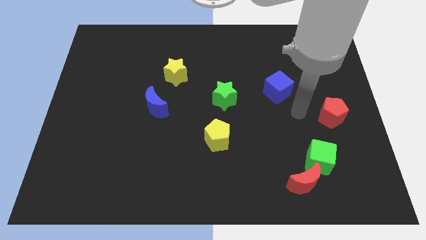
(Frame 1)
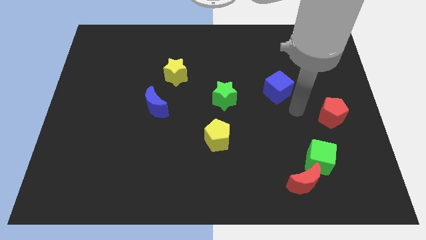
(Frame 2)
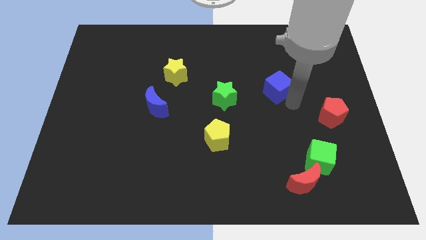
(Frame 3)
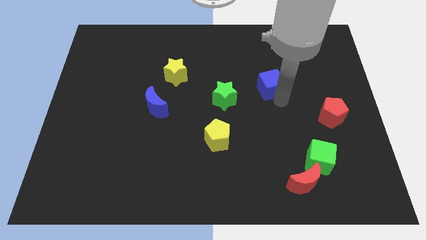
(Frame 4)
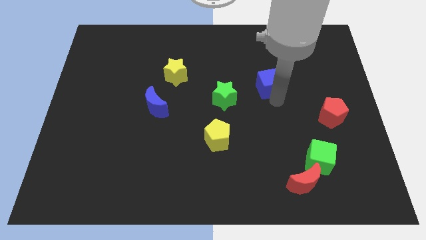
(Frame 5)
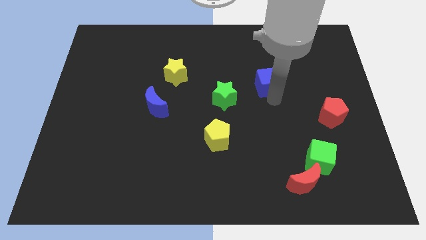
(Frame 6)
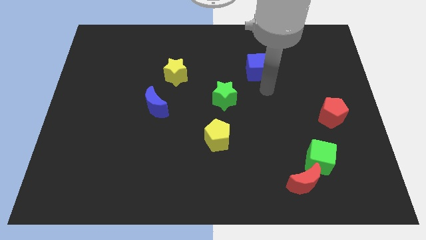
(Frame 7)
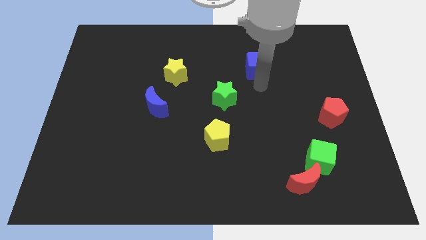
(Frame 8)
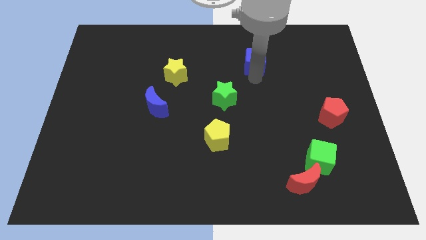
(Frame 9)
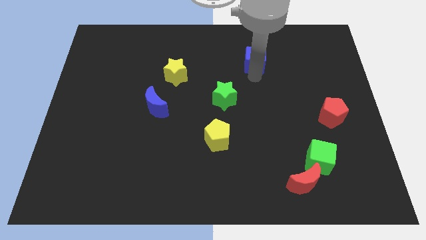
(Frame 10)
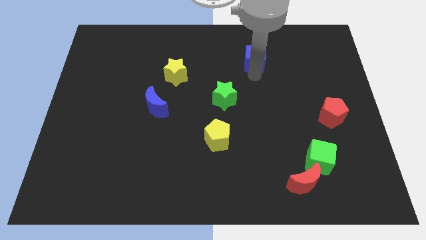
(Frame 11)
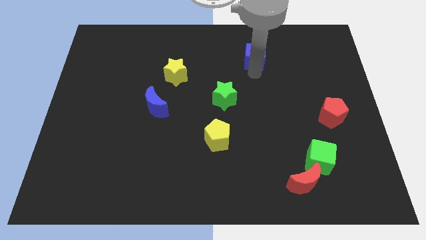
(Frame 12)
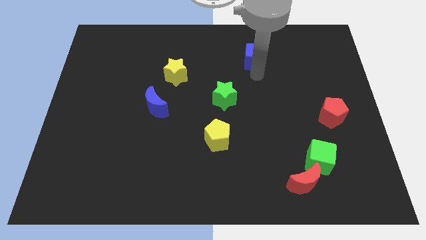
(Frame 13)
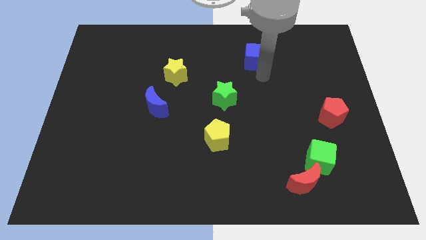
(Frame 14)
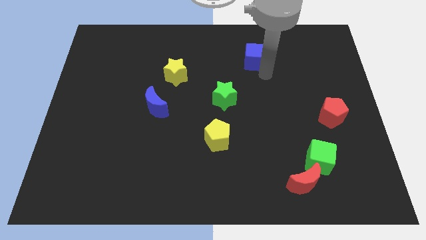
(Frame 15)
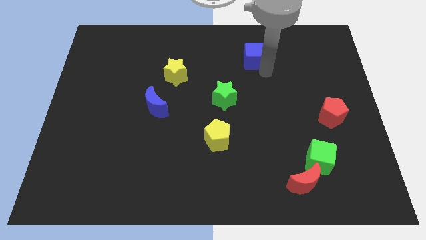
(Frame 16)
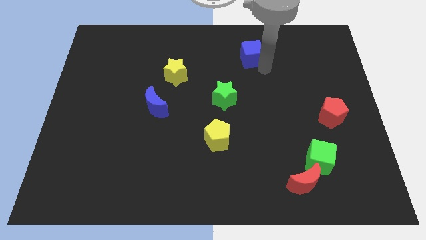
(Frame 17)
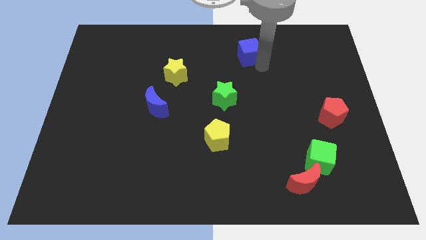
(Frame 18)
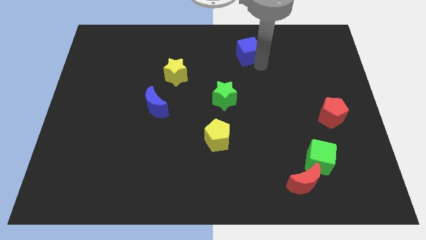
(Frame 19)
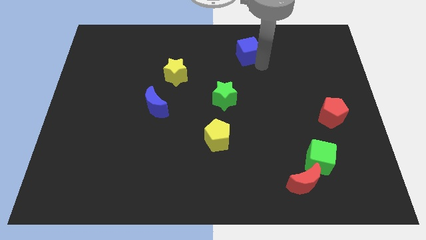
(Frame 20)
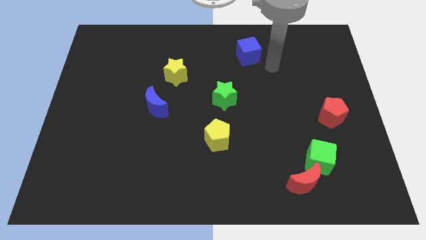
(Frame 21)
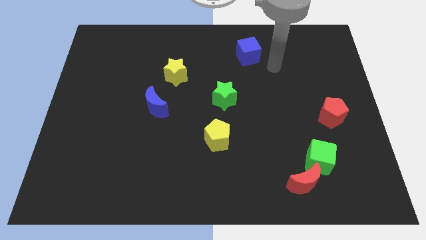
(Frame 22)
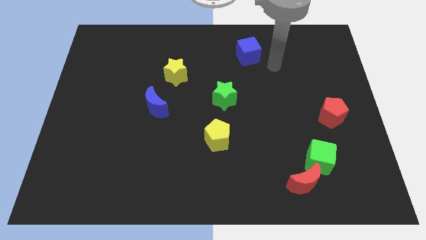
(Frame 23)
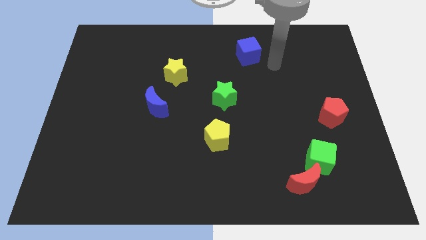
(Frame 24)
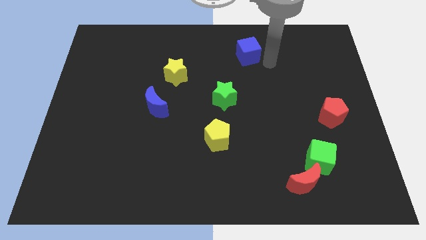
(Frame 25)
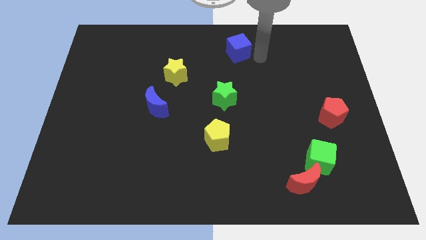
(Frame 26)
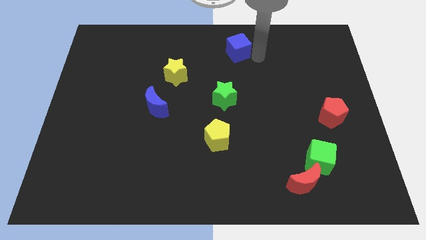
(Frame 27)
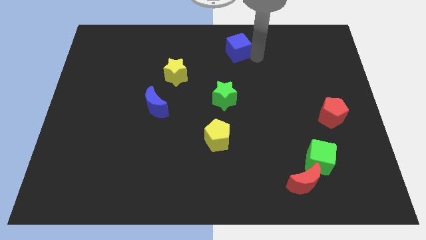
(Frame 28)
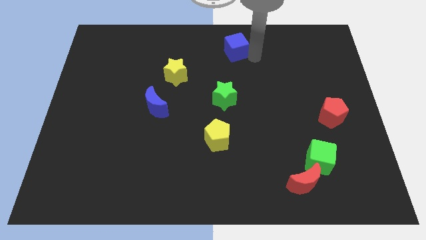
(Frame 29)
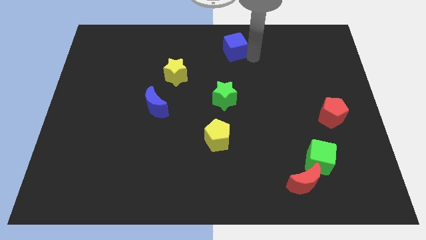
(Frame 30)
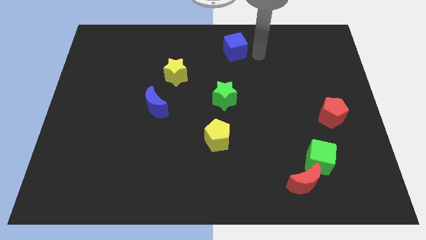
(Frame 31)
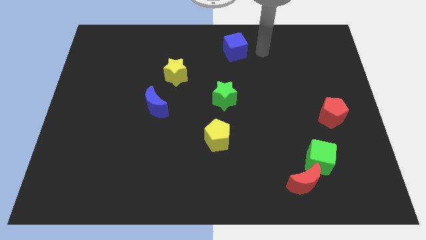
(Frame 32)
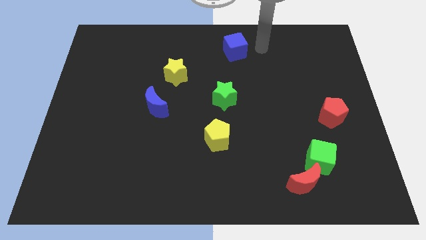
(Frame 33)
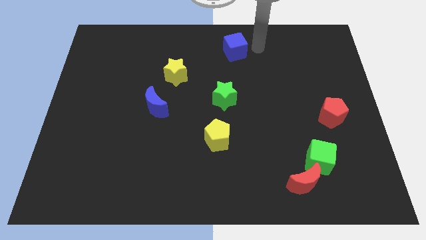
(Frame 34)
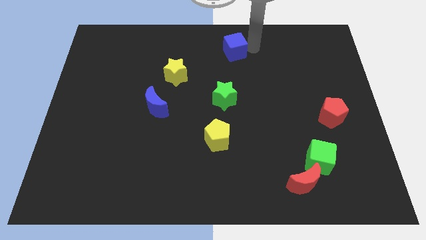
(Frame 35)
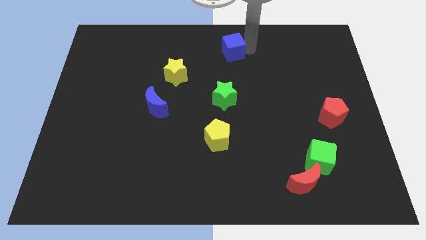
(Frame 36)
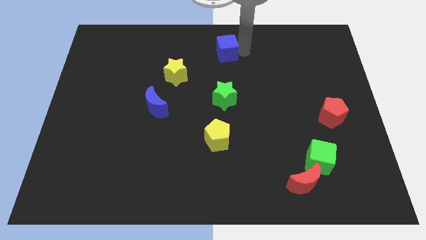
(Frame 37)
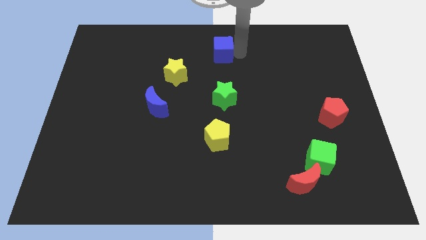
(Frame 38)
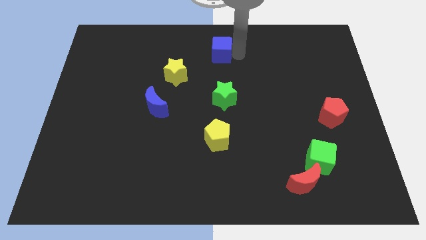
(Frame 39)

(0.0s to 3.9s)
move the blue cube to the top center of the board

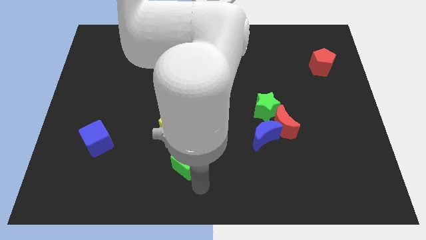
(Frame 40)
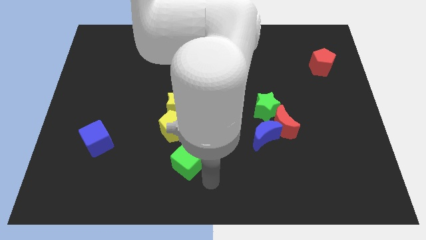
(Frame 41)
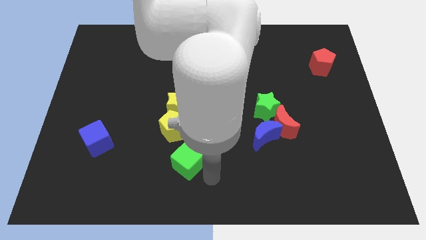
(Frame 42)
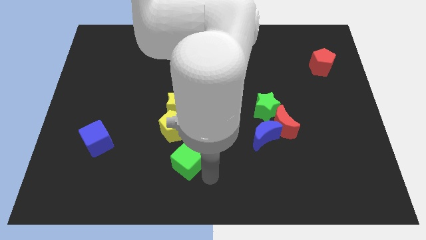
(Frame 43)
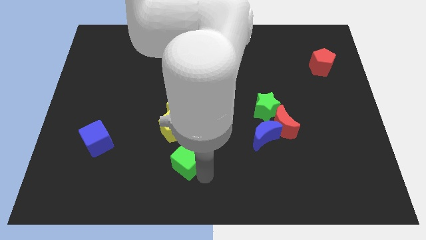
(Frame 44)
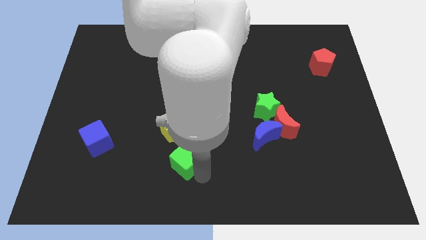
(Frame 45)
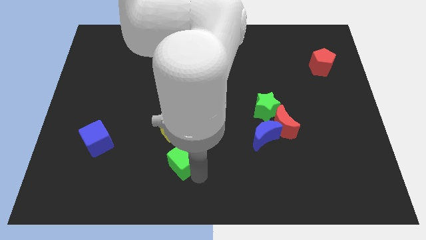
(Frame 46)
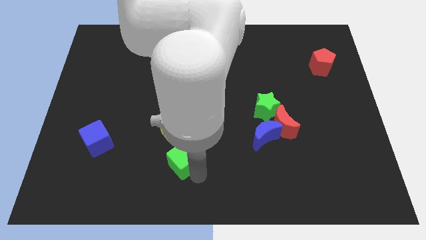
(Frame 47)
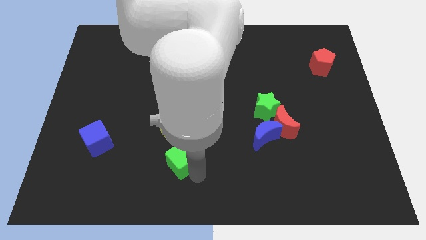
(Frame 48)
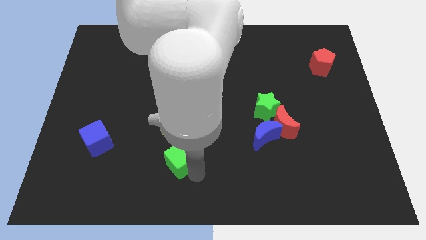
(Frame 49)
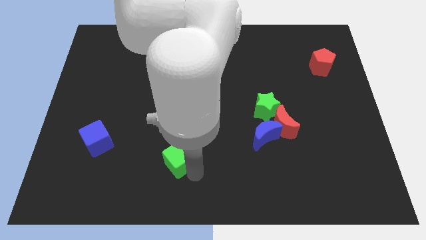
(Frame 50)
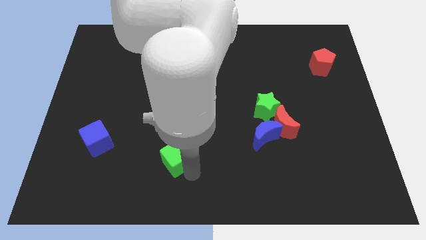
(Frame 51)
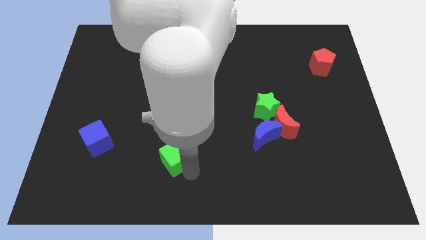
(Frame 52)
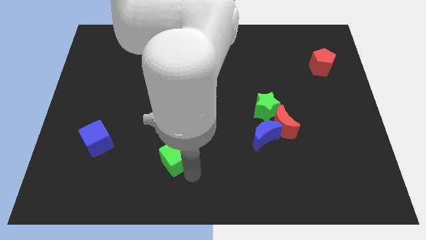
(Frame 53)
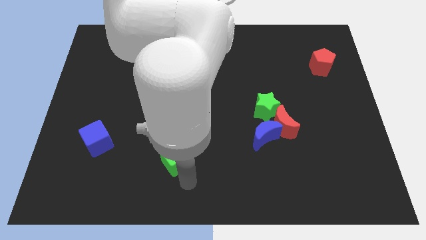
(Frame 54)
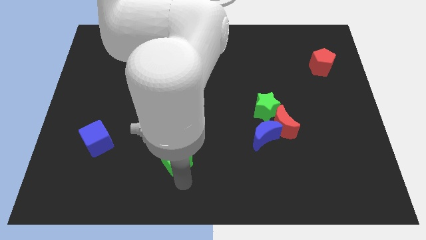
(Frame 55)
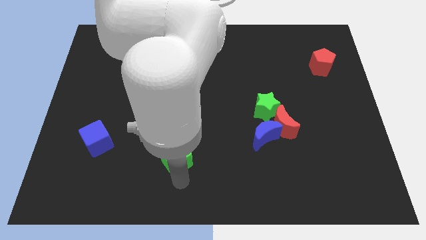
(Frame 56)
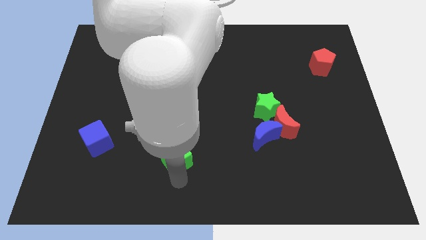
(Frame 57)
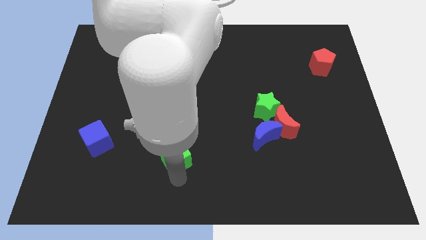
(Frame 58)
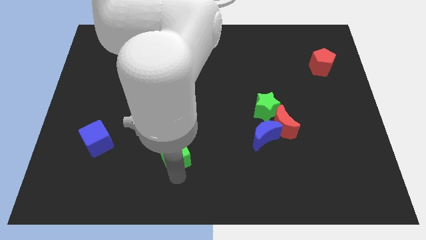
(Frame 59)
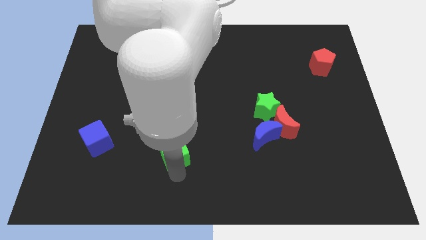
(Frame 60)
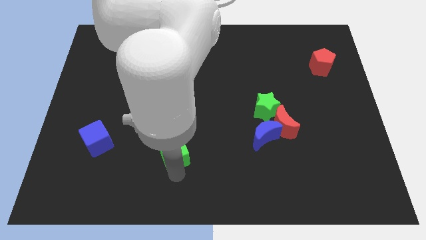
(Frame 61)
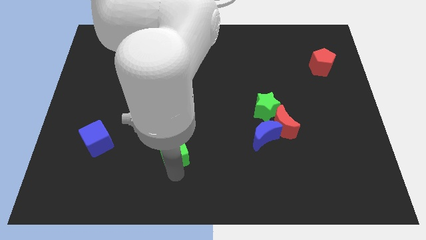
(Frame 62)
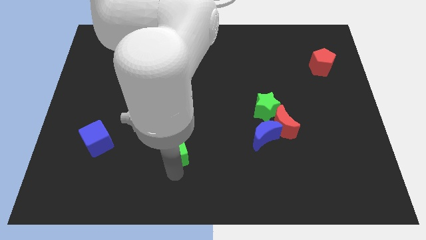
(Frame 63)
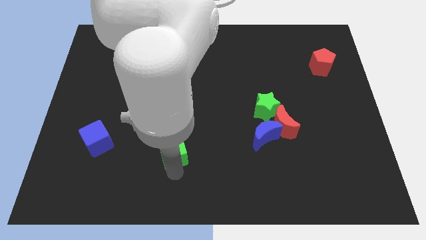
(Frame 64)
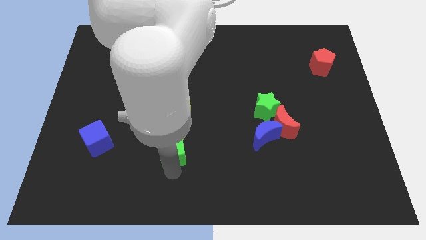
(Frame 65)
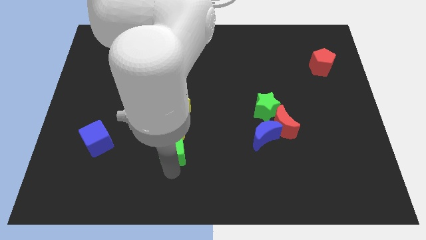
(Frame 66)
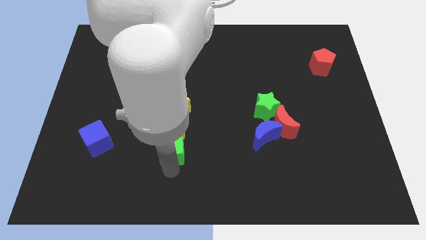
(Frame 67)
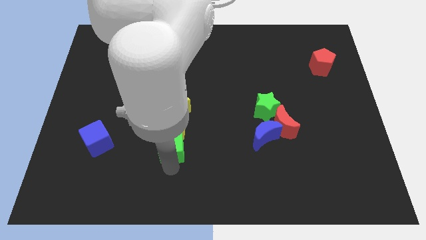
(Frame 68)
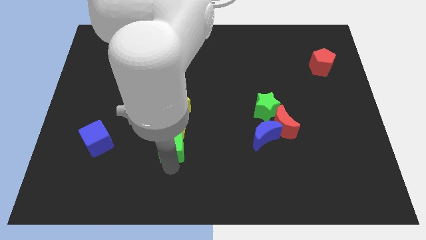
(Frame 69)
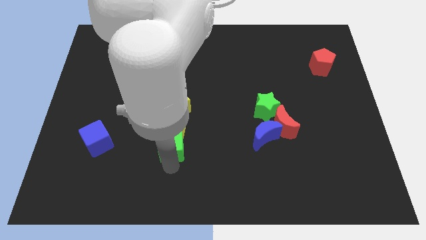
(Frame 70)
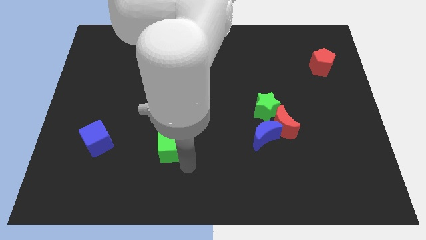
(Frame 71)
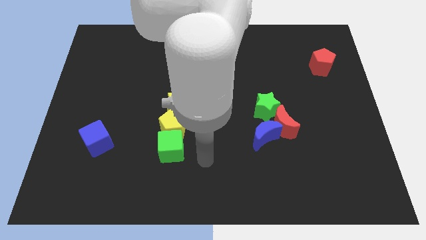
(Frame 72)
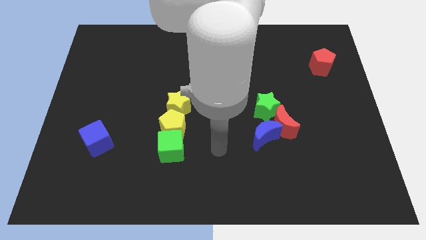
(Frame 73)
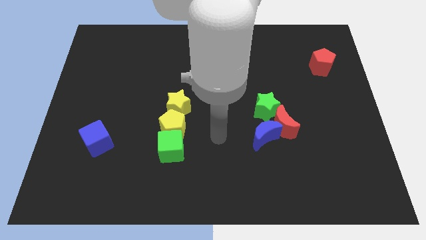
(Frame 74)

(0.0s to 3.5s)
place the green cube at the bottom side of the vertical line of blocks

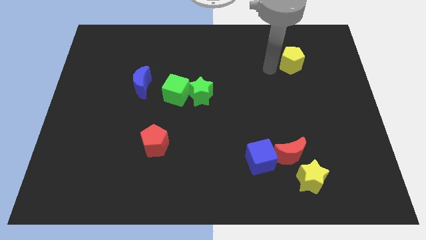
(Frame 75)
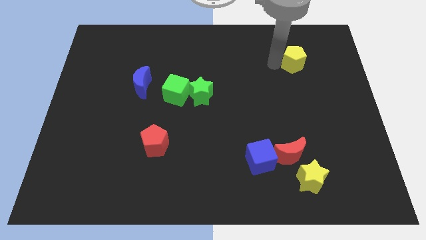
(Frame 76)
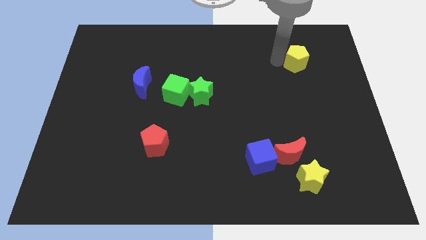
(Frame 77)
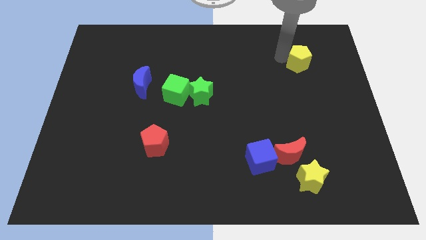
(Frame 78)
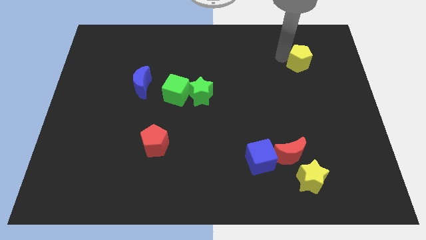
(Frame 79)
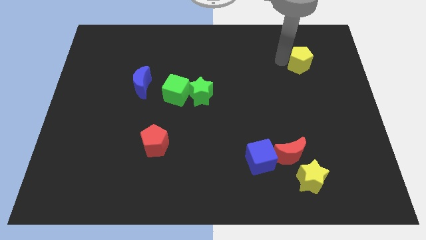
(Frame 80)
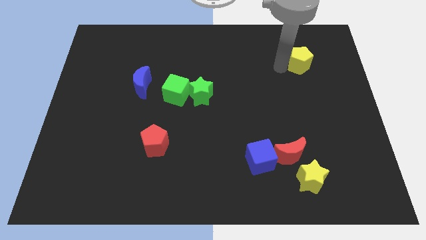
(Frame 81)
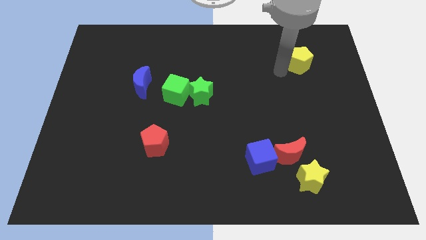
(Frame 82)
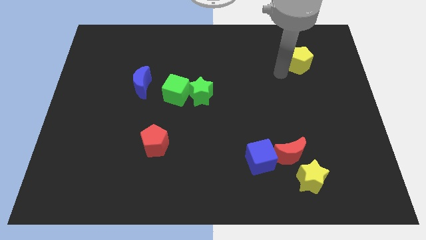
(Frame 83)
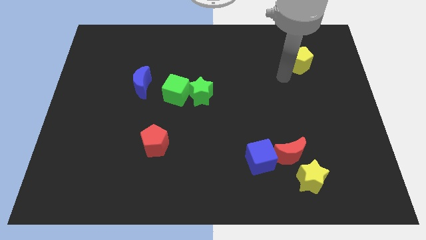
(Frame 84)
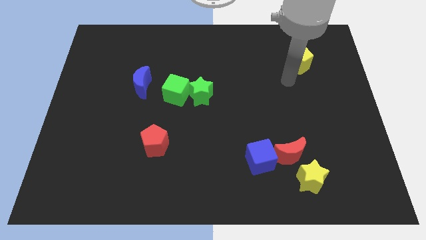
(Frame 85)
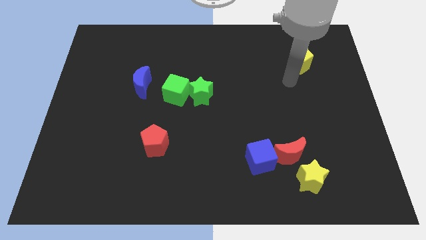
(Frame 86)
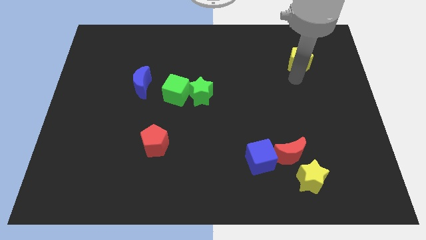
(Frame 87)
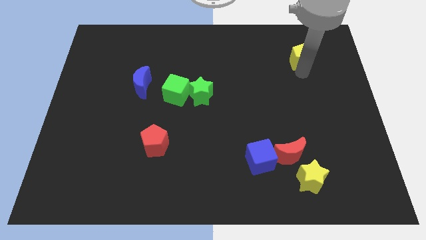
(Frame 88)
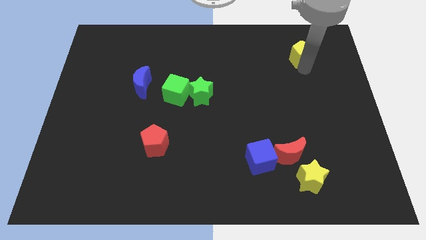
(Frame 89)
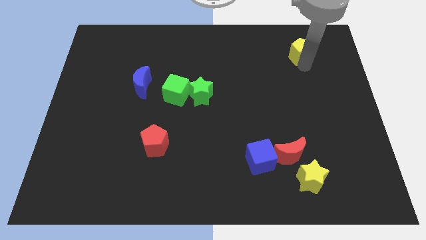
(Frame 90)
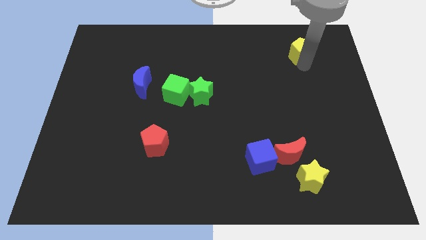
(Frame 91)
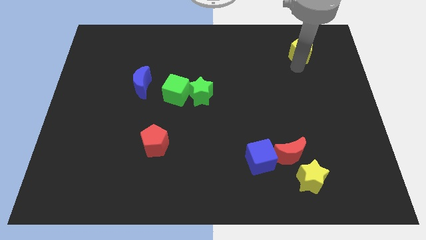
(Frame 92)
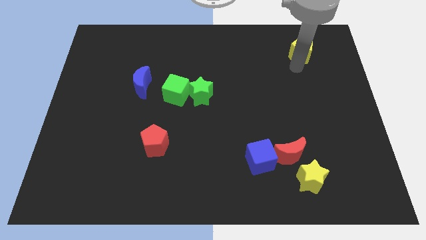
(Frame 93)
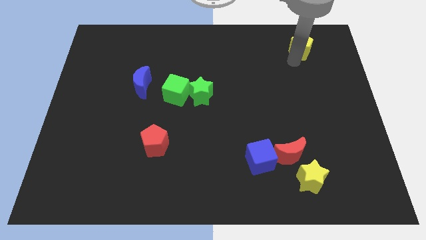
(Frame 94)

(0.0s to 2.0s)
move yellow pentagon towards top right of the board
